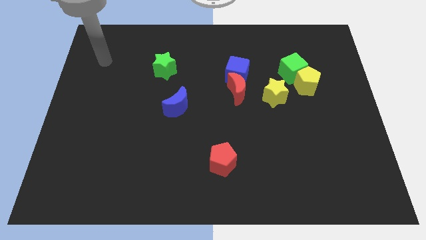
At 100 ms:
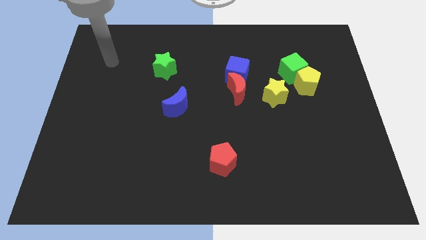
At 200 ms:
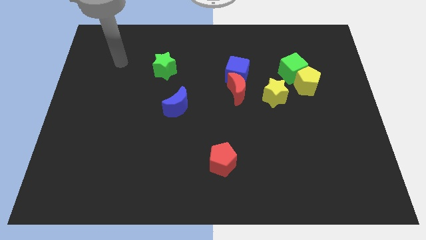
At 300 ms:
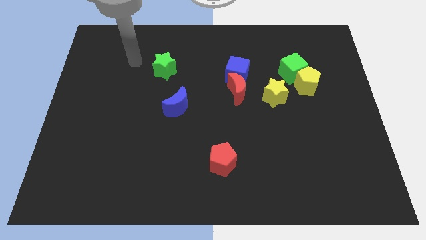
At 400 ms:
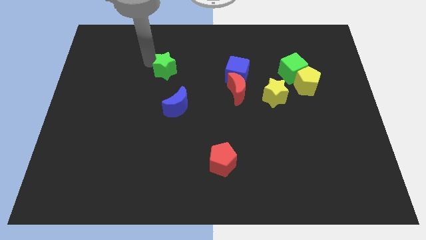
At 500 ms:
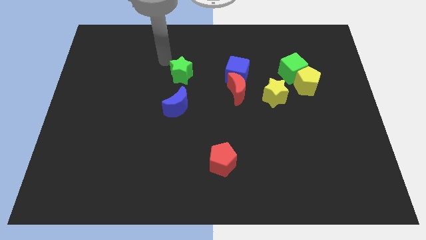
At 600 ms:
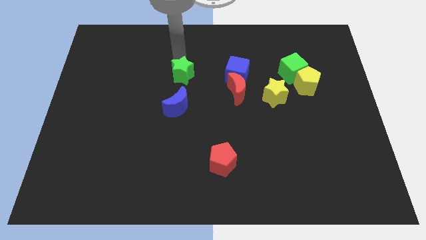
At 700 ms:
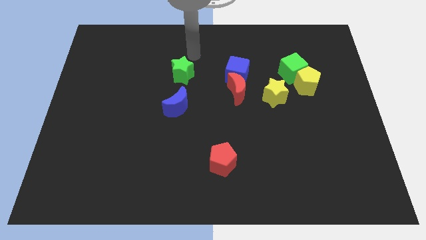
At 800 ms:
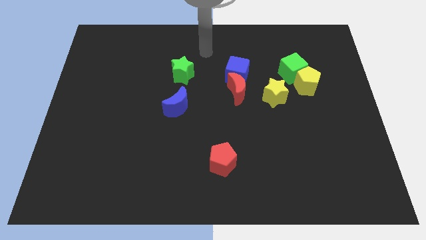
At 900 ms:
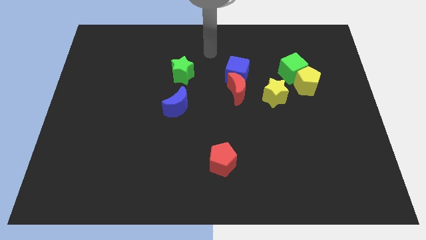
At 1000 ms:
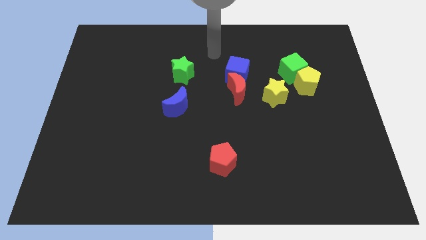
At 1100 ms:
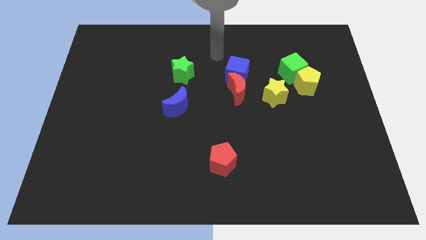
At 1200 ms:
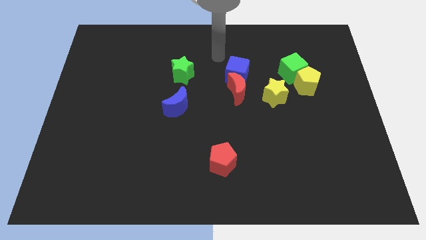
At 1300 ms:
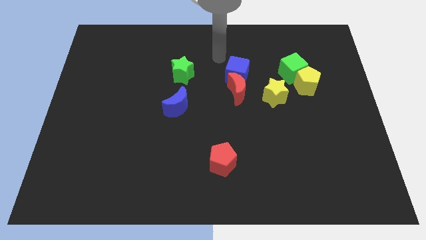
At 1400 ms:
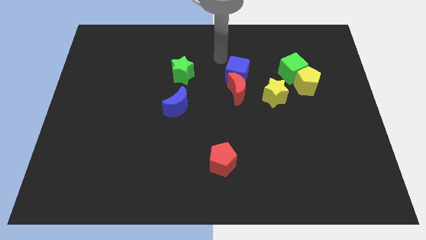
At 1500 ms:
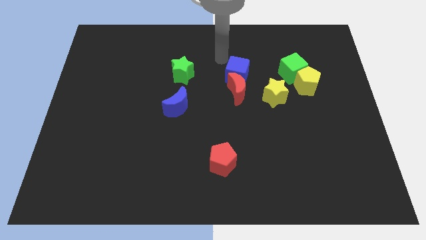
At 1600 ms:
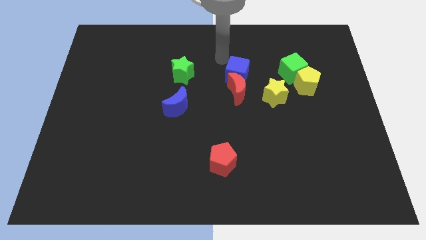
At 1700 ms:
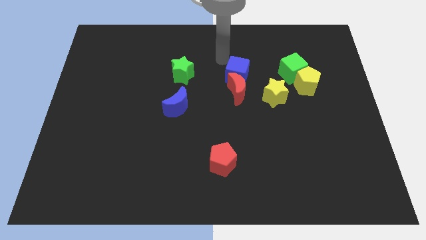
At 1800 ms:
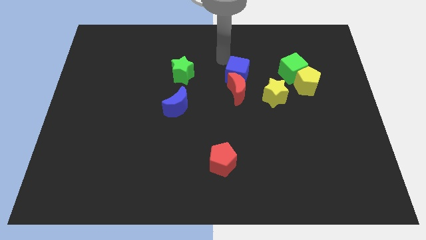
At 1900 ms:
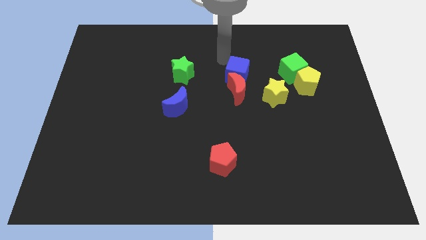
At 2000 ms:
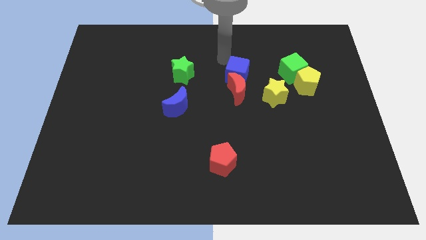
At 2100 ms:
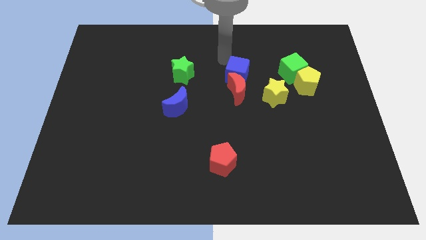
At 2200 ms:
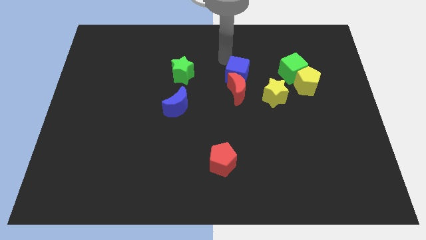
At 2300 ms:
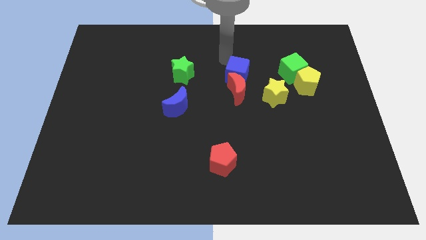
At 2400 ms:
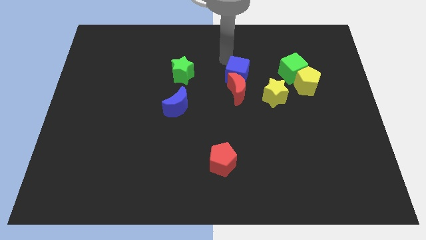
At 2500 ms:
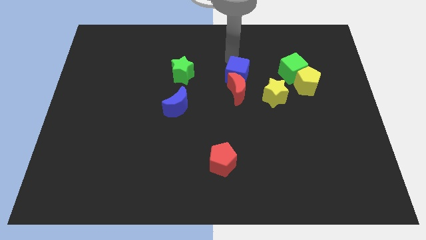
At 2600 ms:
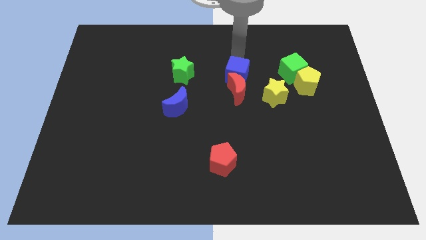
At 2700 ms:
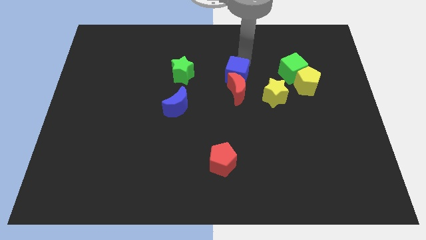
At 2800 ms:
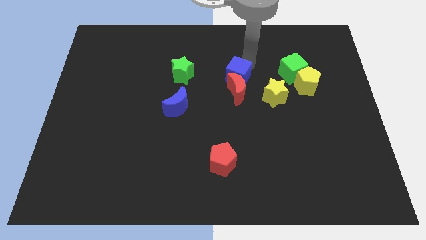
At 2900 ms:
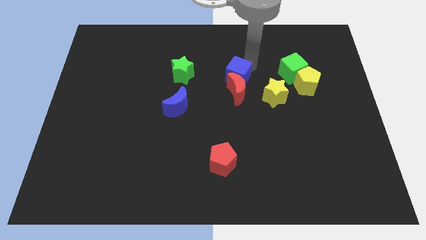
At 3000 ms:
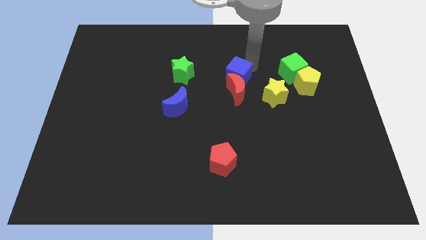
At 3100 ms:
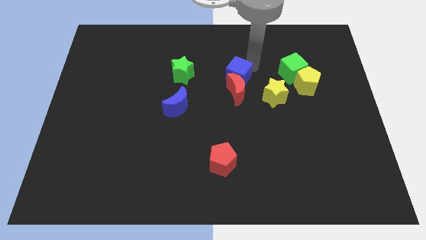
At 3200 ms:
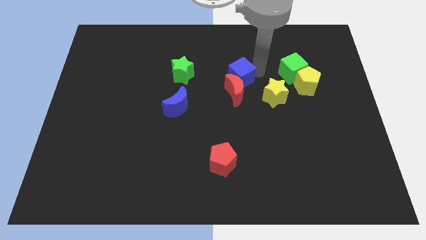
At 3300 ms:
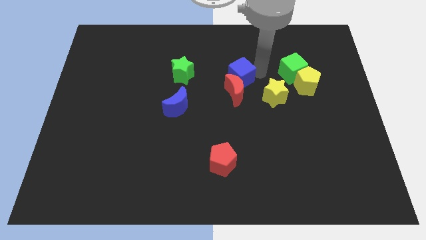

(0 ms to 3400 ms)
push the blue cube into the red moon

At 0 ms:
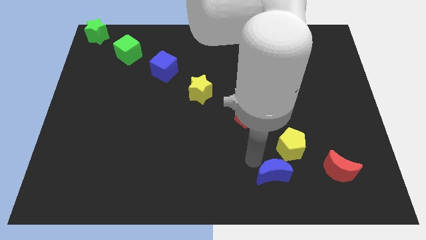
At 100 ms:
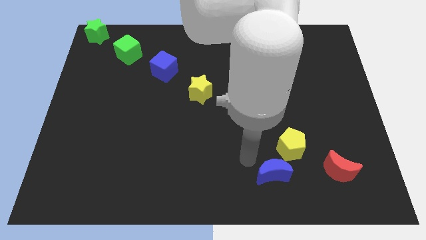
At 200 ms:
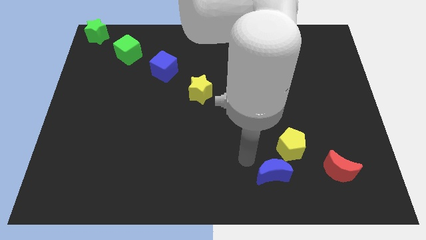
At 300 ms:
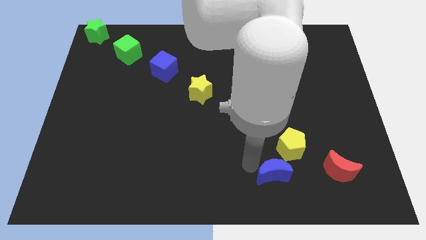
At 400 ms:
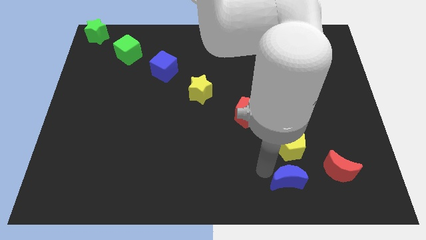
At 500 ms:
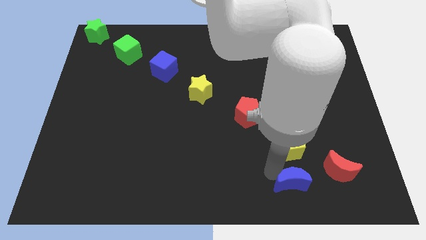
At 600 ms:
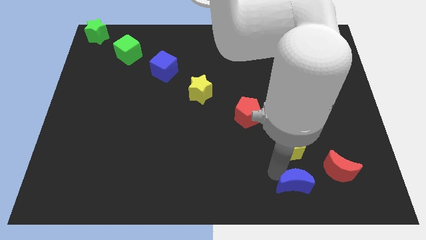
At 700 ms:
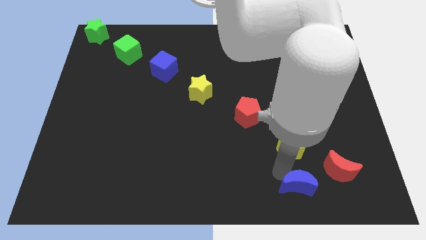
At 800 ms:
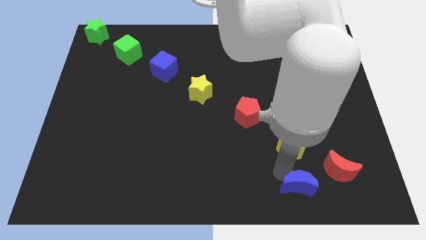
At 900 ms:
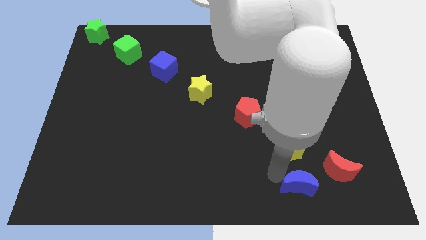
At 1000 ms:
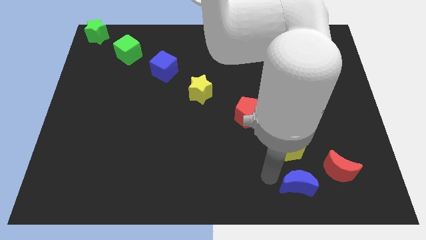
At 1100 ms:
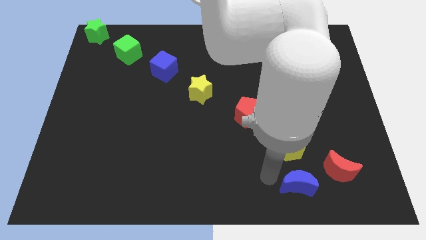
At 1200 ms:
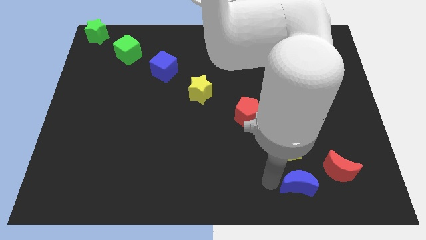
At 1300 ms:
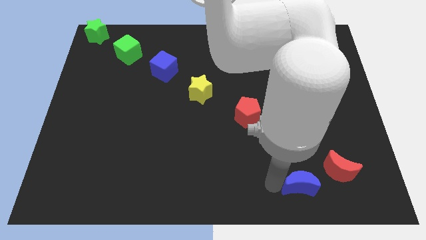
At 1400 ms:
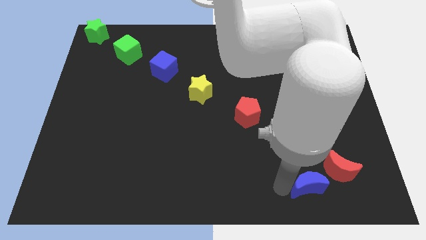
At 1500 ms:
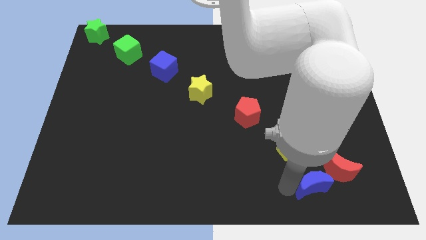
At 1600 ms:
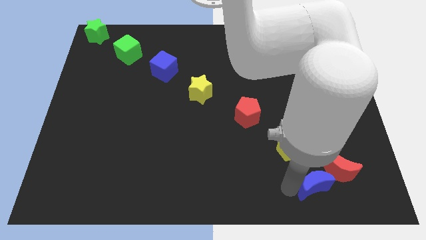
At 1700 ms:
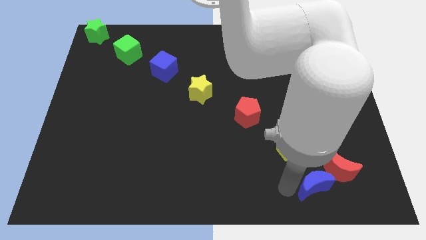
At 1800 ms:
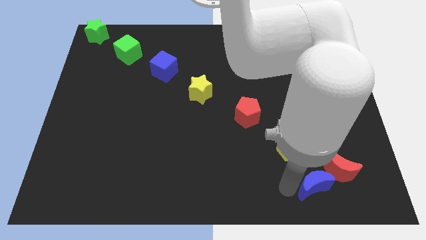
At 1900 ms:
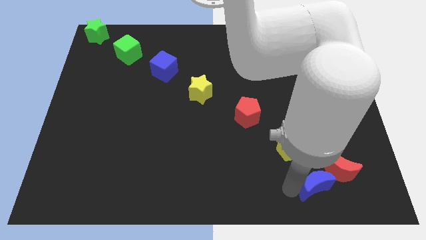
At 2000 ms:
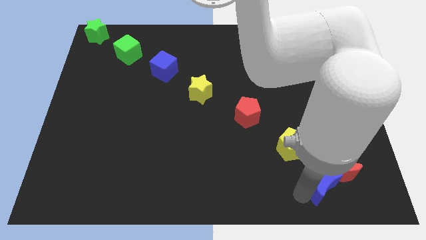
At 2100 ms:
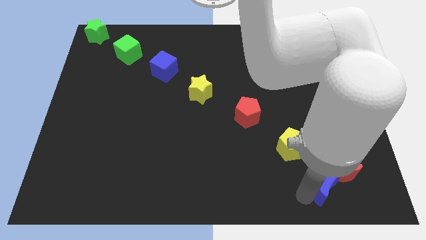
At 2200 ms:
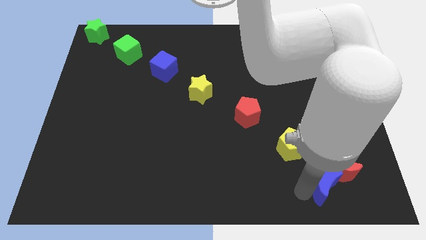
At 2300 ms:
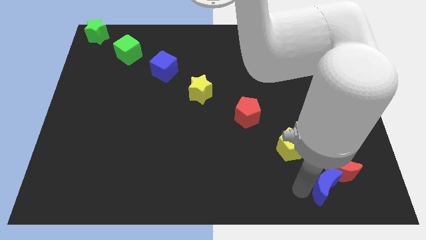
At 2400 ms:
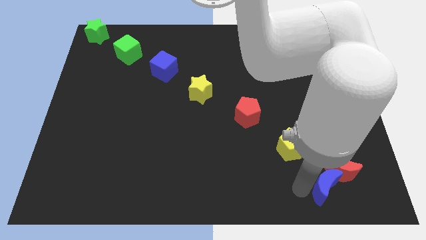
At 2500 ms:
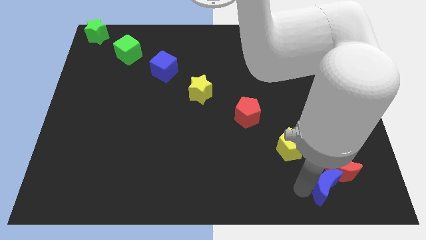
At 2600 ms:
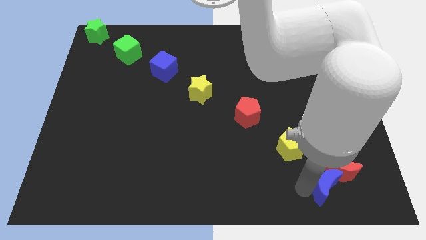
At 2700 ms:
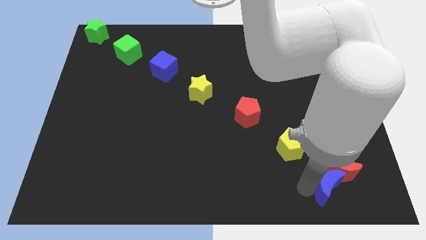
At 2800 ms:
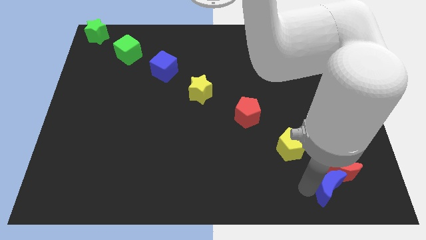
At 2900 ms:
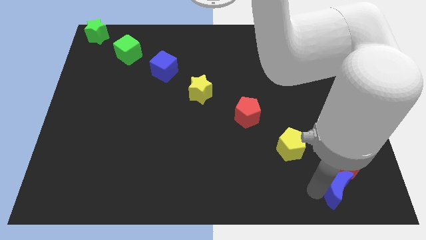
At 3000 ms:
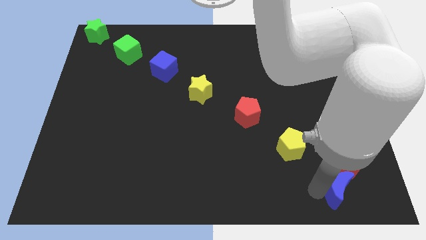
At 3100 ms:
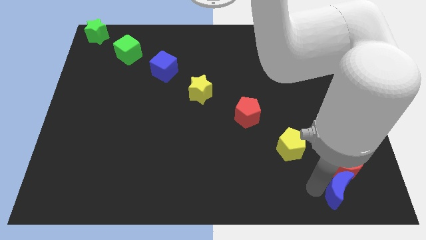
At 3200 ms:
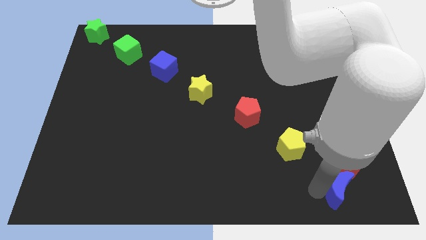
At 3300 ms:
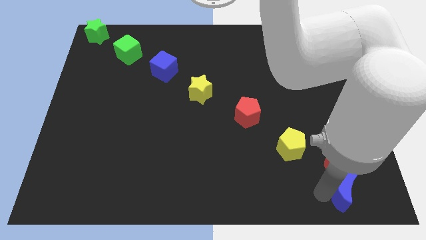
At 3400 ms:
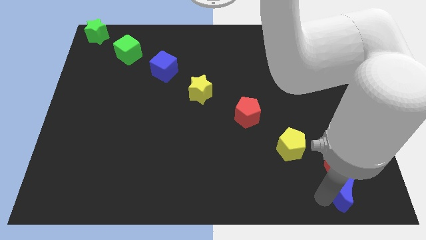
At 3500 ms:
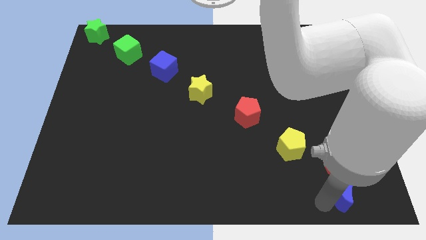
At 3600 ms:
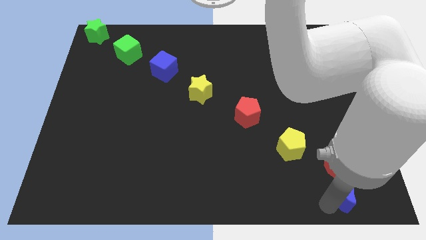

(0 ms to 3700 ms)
move the blue moon below the red moon

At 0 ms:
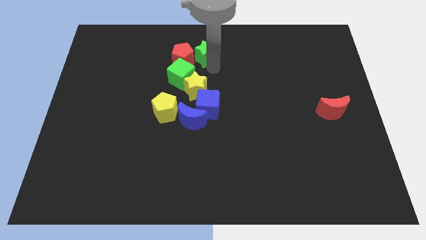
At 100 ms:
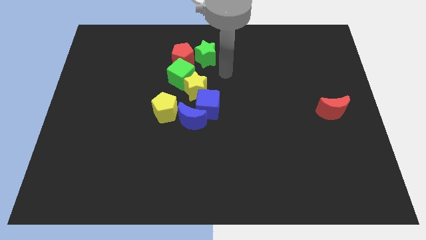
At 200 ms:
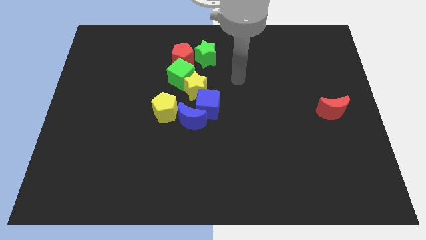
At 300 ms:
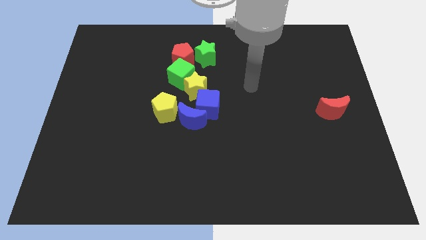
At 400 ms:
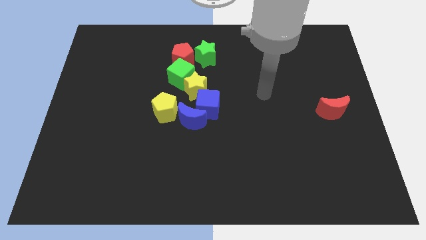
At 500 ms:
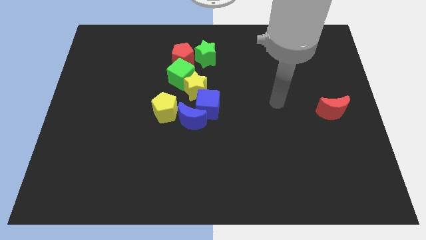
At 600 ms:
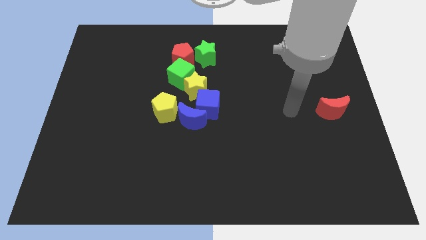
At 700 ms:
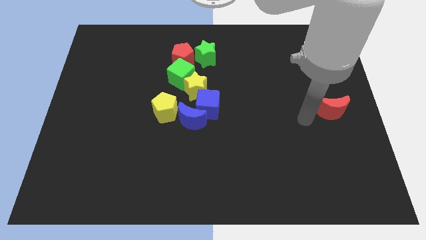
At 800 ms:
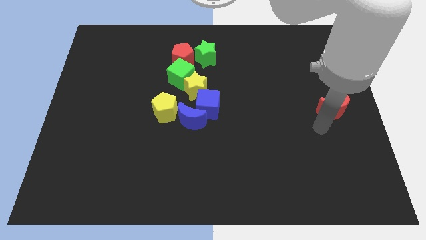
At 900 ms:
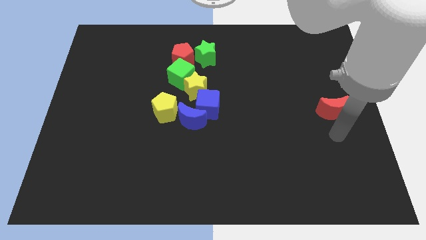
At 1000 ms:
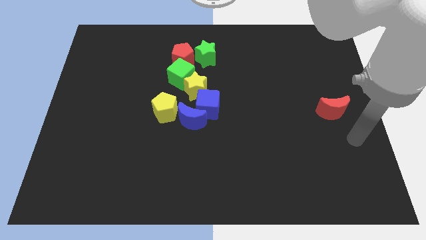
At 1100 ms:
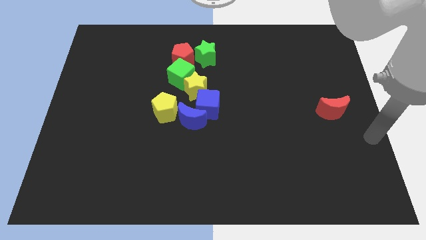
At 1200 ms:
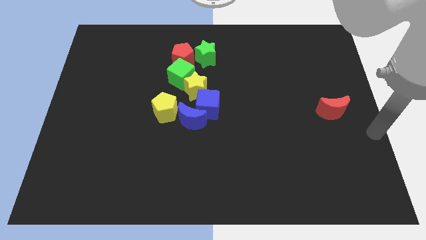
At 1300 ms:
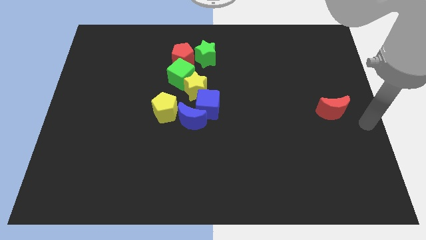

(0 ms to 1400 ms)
move the arm away from the green star

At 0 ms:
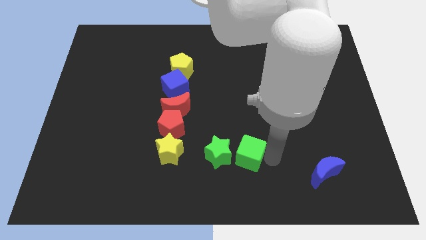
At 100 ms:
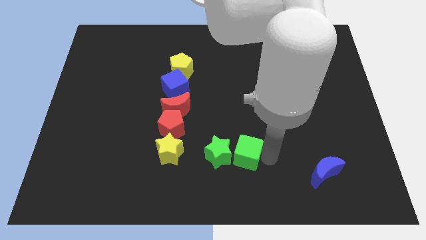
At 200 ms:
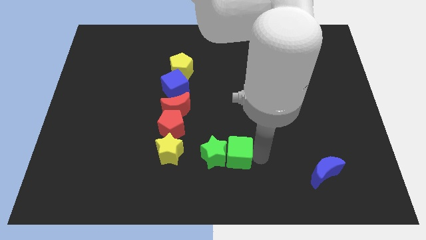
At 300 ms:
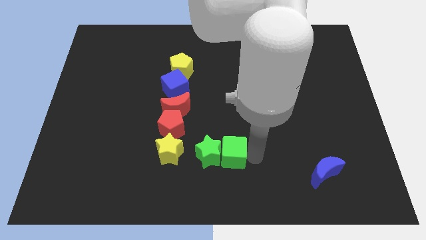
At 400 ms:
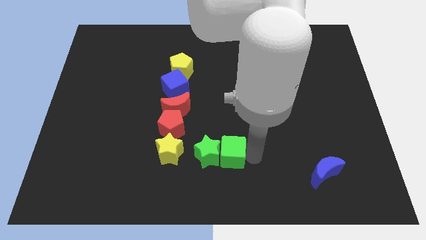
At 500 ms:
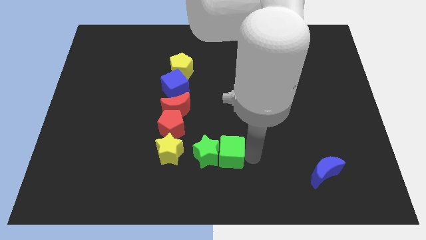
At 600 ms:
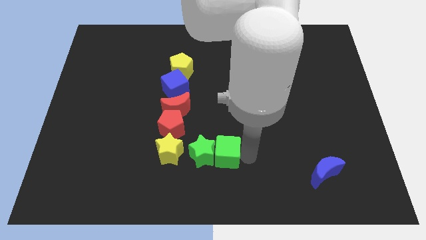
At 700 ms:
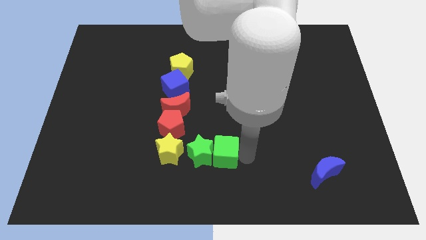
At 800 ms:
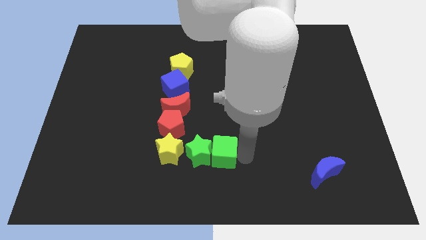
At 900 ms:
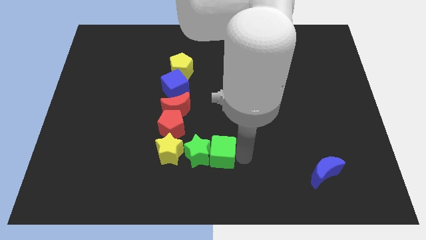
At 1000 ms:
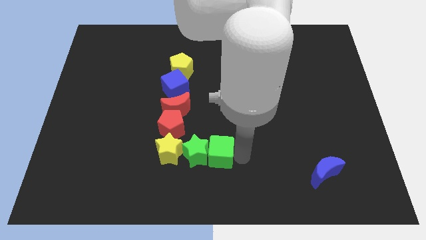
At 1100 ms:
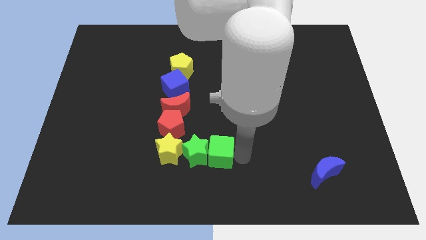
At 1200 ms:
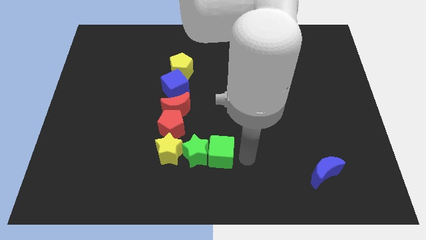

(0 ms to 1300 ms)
push the green blocks to the right of the yellow star
